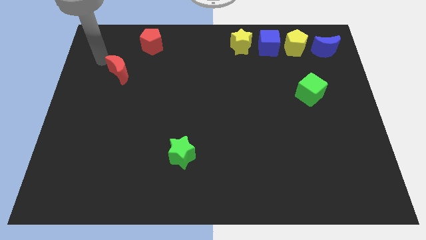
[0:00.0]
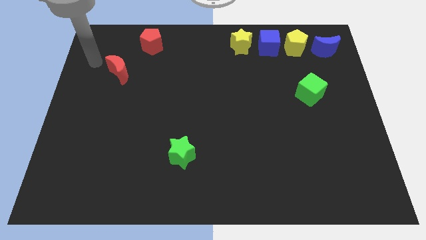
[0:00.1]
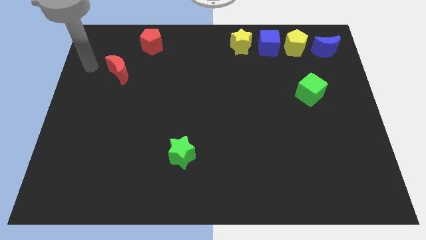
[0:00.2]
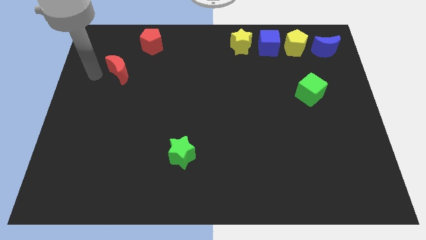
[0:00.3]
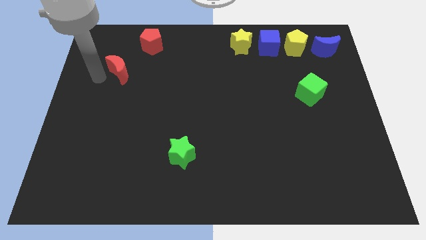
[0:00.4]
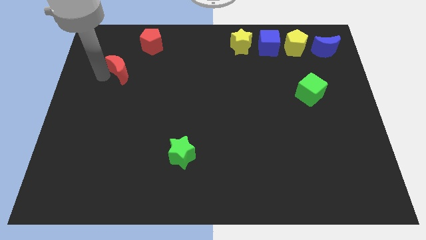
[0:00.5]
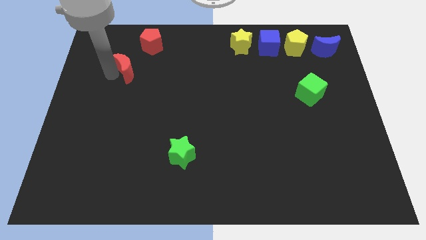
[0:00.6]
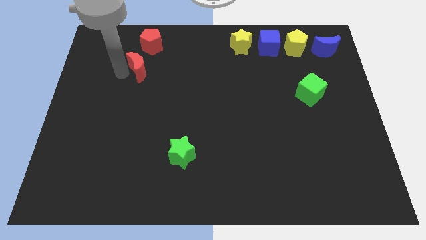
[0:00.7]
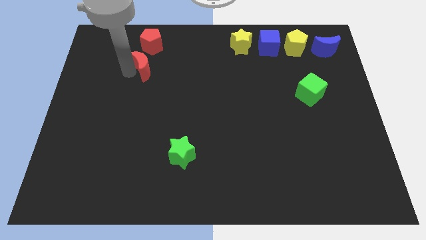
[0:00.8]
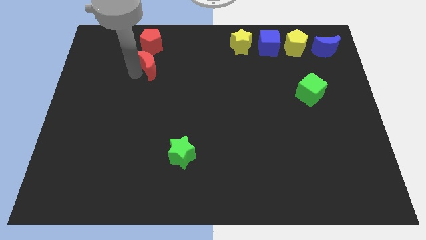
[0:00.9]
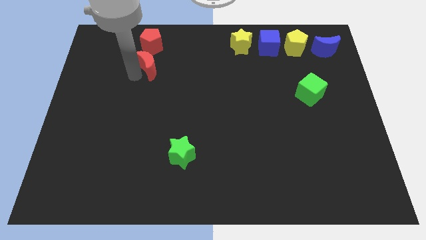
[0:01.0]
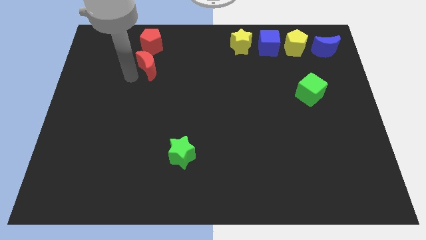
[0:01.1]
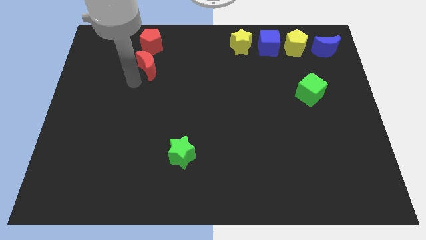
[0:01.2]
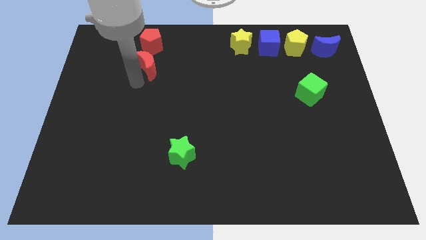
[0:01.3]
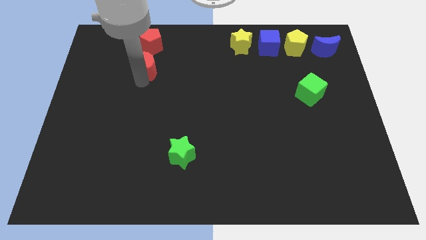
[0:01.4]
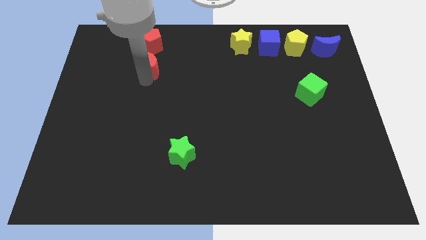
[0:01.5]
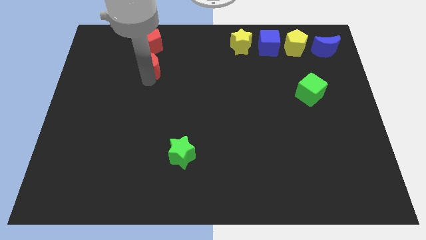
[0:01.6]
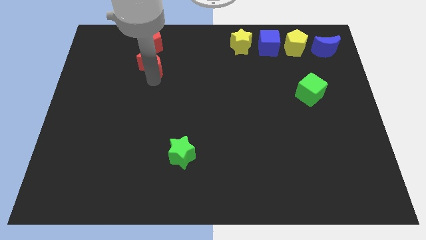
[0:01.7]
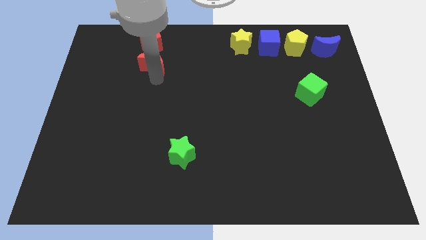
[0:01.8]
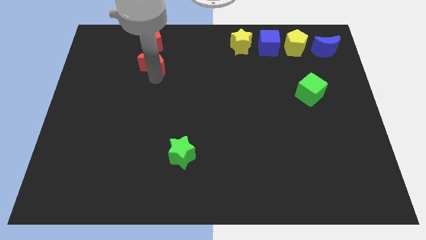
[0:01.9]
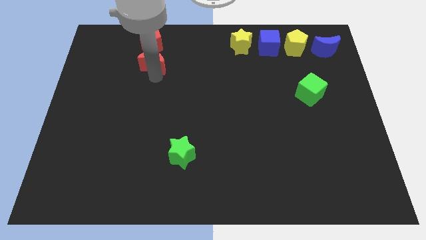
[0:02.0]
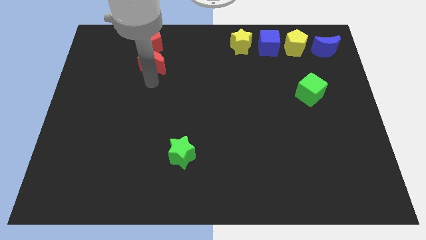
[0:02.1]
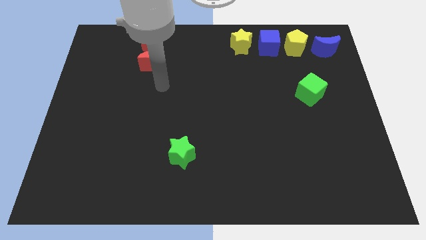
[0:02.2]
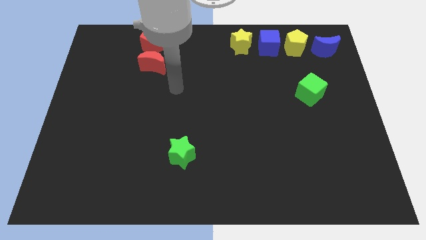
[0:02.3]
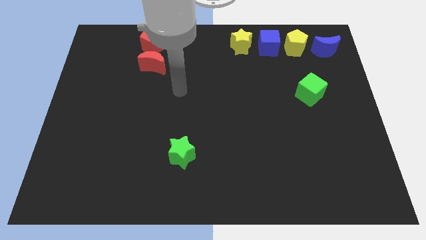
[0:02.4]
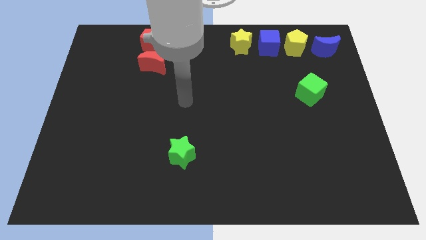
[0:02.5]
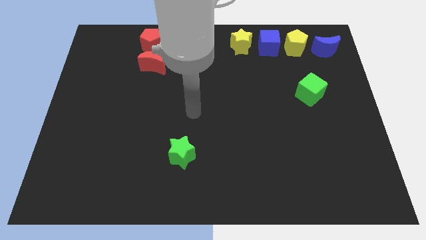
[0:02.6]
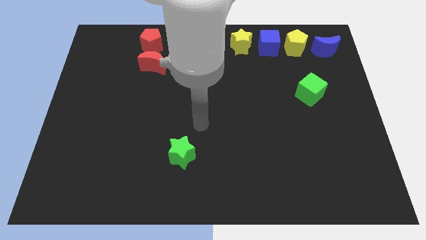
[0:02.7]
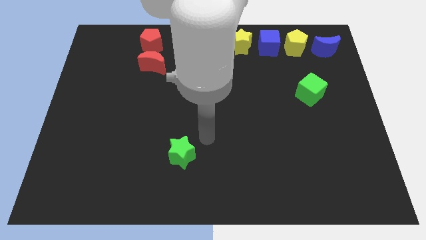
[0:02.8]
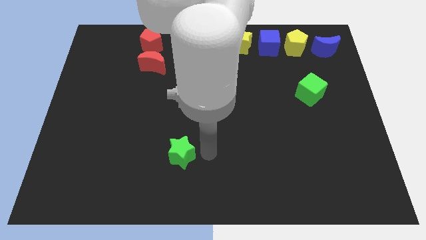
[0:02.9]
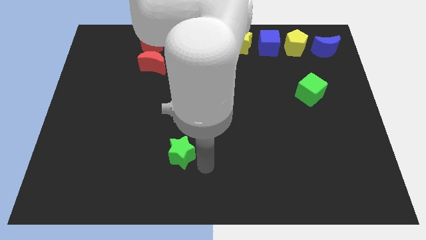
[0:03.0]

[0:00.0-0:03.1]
put the red moon vertically below the red pentagon

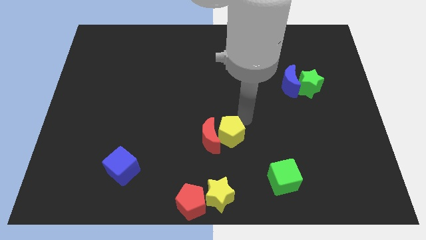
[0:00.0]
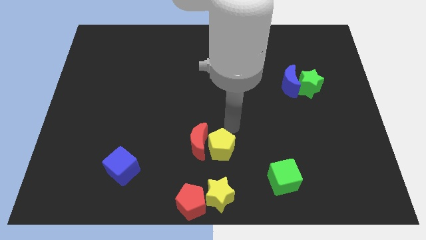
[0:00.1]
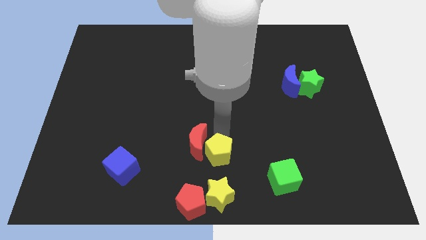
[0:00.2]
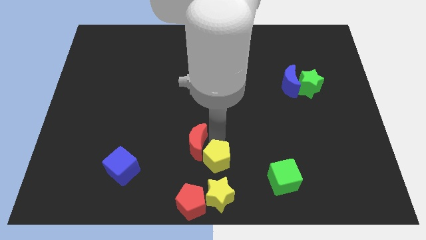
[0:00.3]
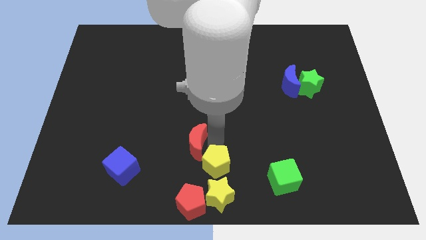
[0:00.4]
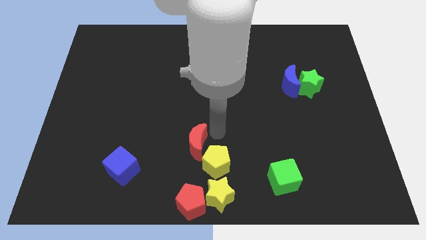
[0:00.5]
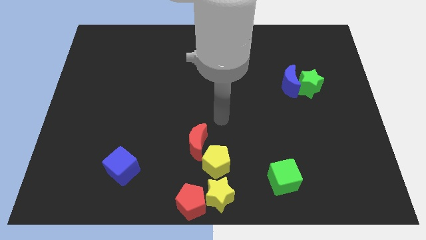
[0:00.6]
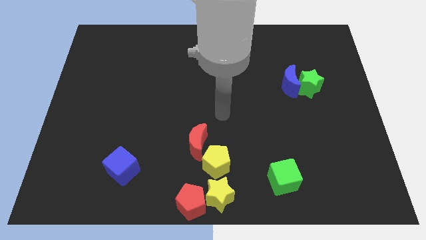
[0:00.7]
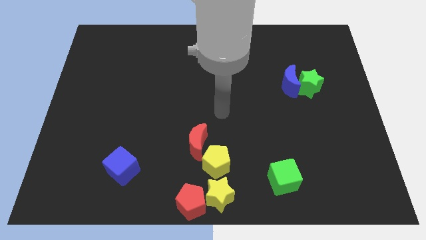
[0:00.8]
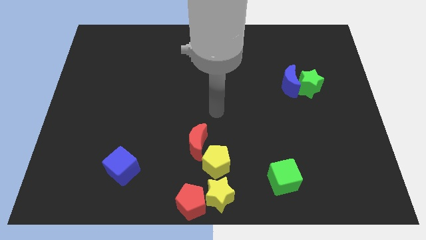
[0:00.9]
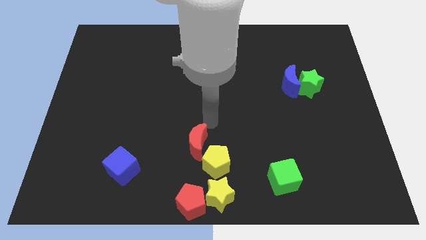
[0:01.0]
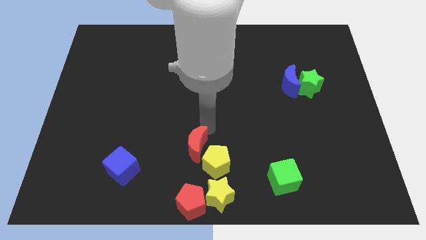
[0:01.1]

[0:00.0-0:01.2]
slightly move the yellow pentagon downward

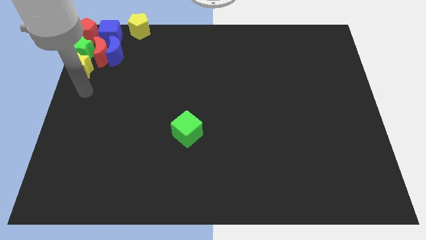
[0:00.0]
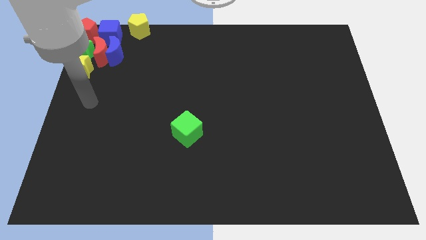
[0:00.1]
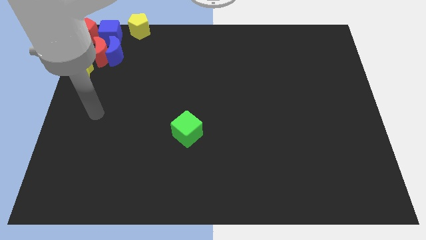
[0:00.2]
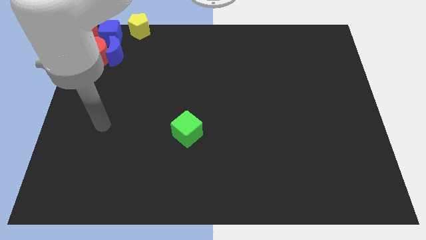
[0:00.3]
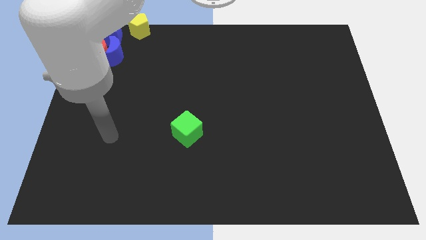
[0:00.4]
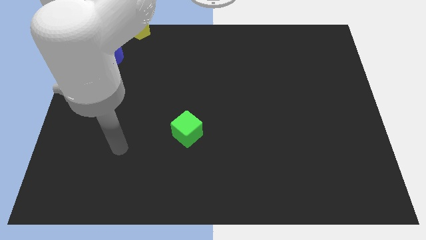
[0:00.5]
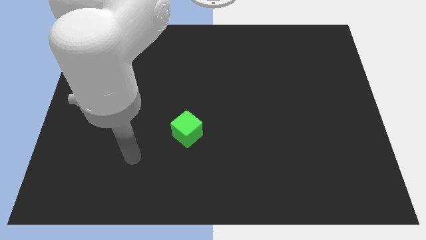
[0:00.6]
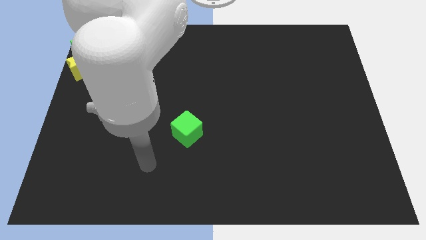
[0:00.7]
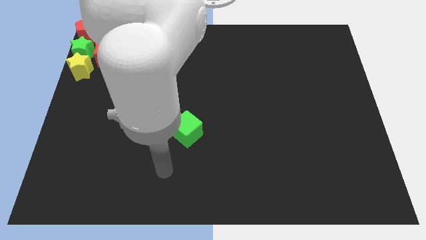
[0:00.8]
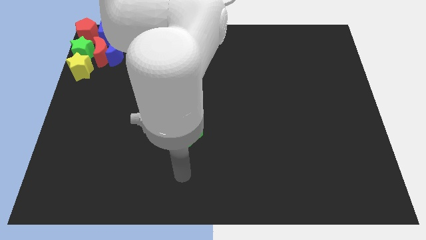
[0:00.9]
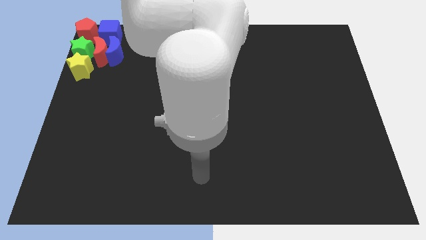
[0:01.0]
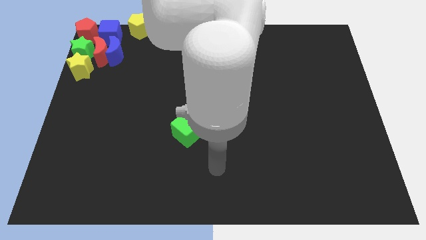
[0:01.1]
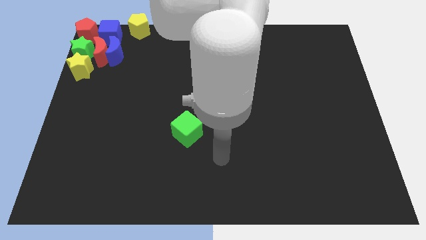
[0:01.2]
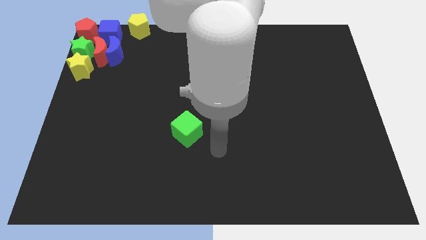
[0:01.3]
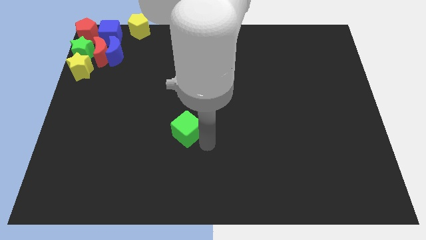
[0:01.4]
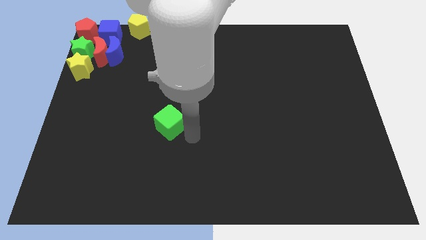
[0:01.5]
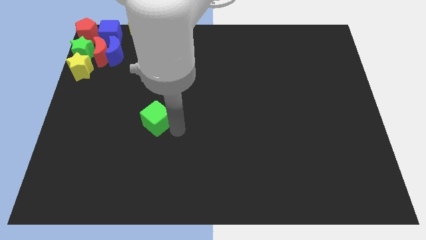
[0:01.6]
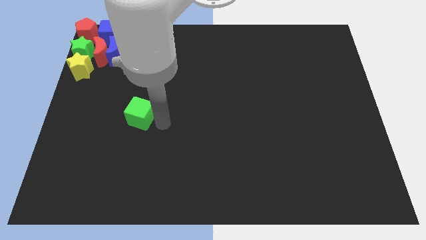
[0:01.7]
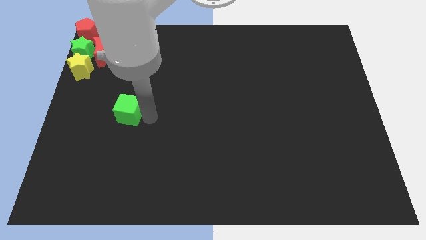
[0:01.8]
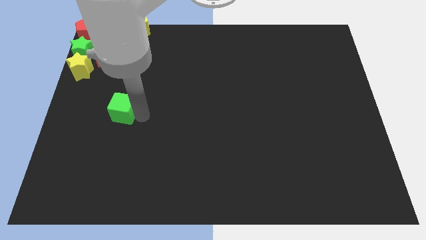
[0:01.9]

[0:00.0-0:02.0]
move your arm right to green cube

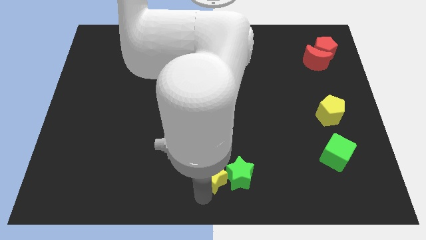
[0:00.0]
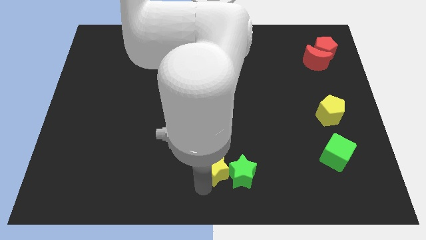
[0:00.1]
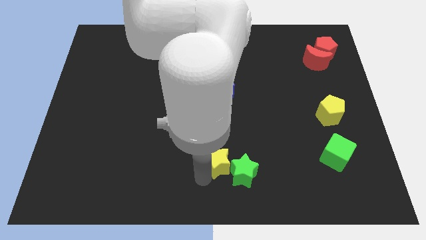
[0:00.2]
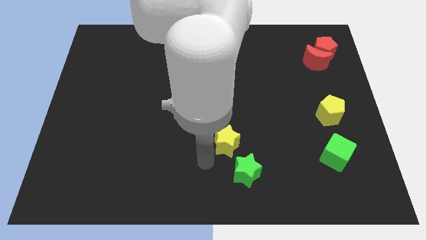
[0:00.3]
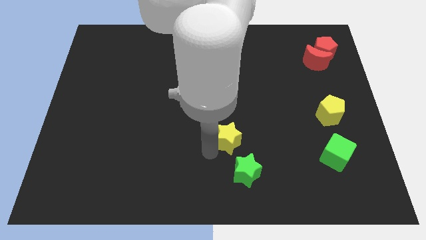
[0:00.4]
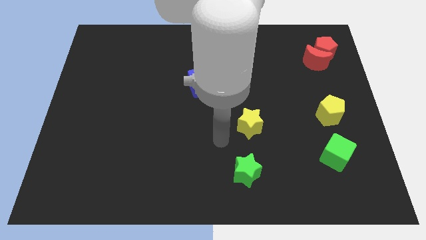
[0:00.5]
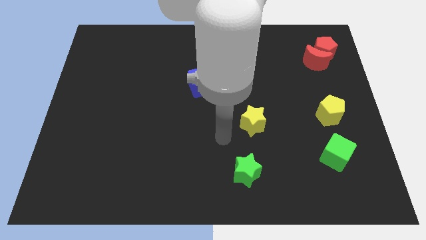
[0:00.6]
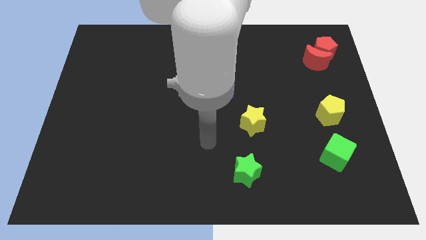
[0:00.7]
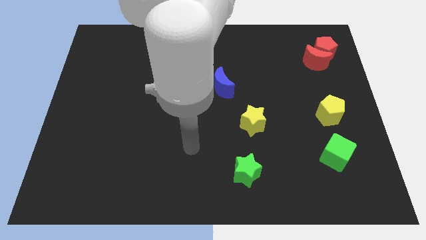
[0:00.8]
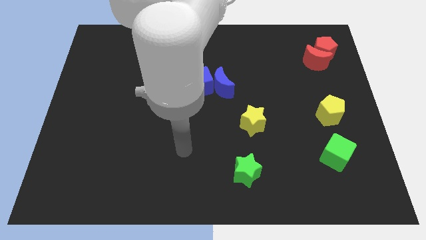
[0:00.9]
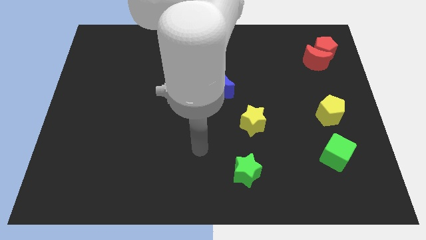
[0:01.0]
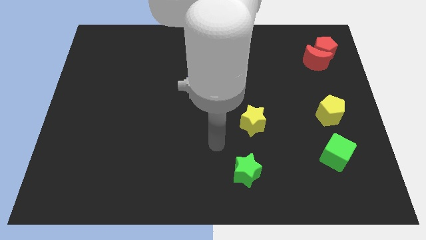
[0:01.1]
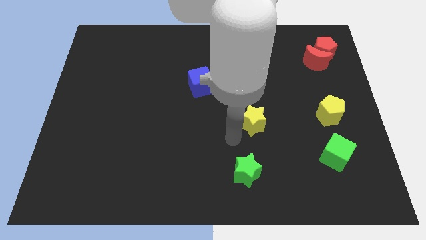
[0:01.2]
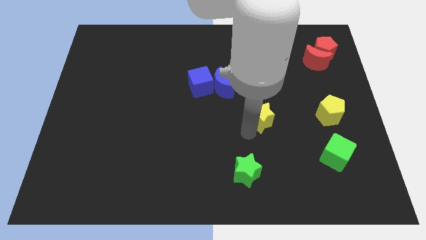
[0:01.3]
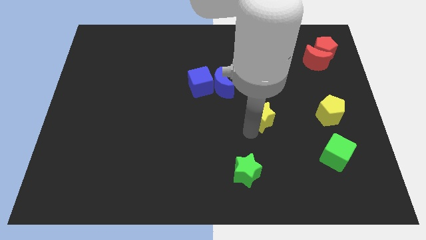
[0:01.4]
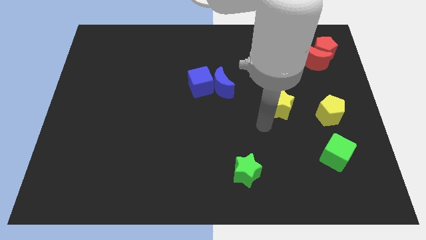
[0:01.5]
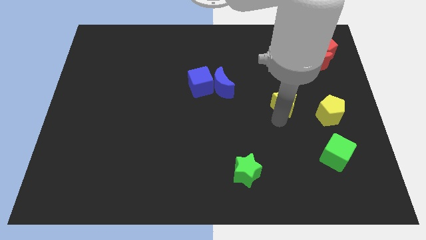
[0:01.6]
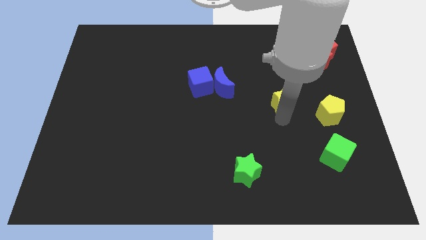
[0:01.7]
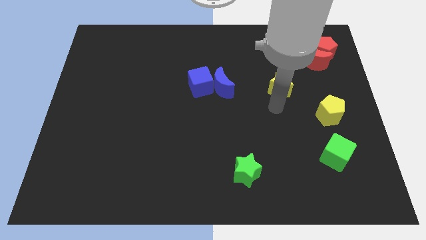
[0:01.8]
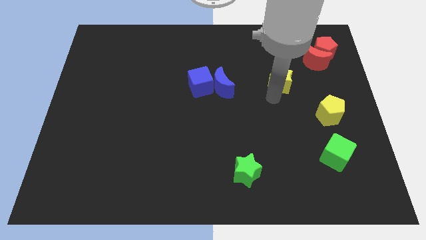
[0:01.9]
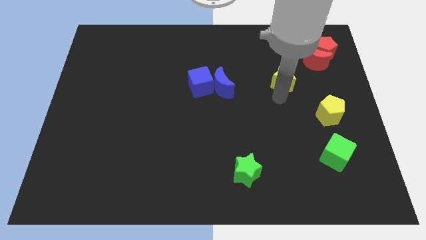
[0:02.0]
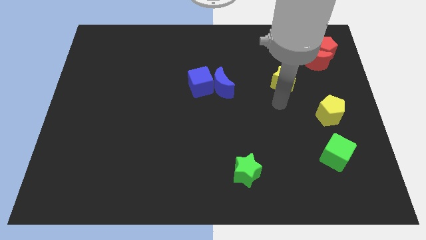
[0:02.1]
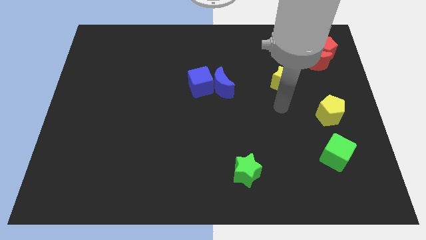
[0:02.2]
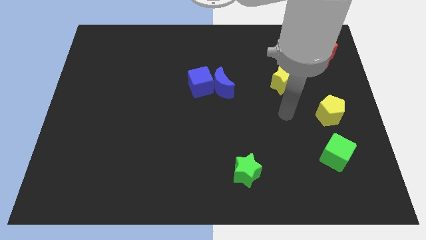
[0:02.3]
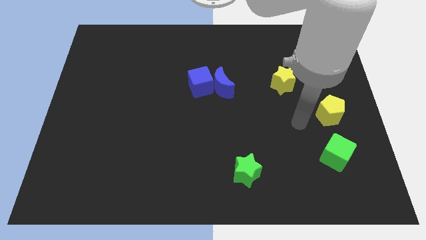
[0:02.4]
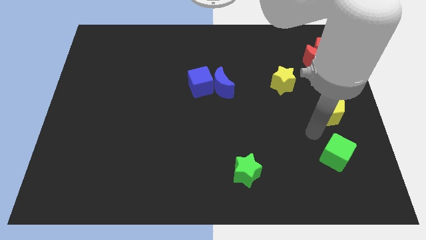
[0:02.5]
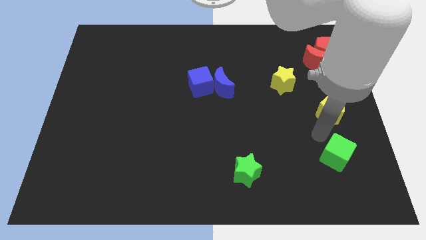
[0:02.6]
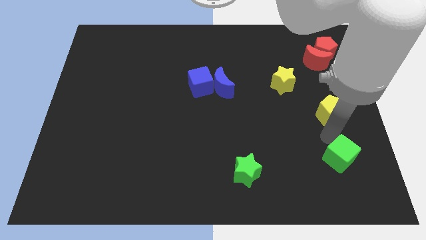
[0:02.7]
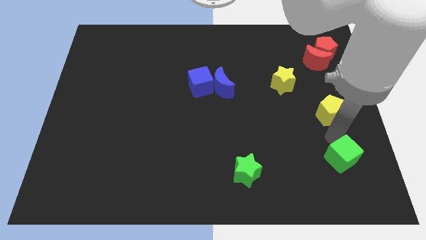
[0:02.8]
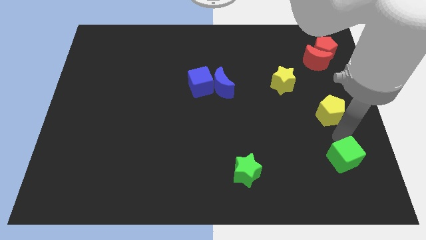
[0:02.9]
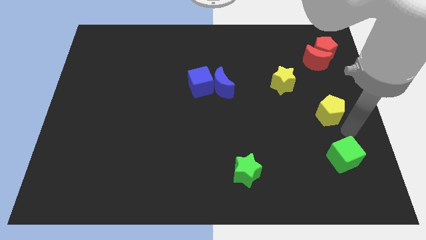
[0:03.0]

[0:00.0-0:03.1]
push yellow star towards the top right of the board
